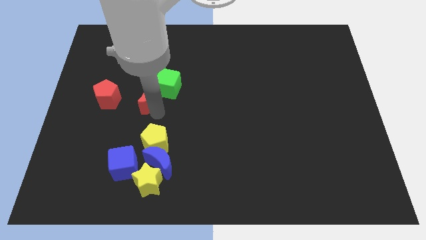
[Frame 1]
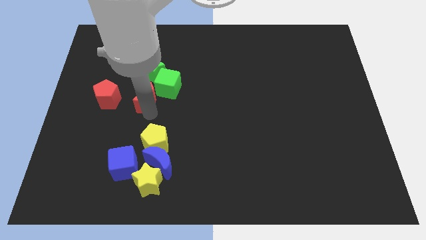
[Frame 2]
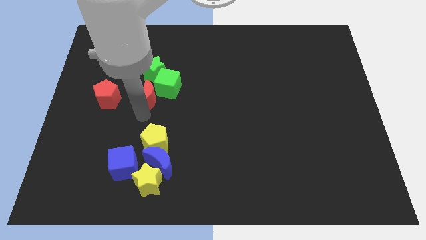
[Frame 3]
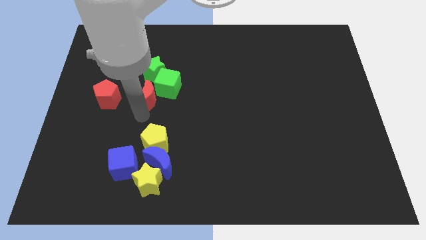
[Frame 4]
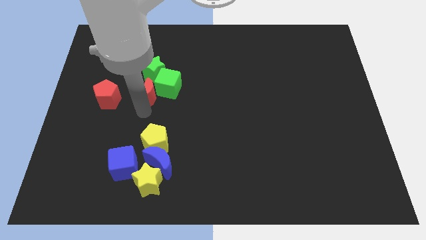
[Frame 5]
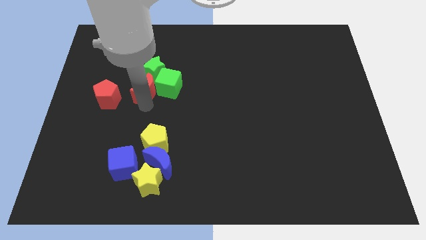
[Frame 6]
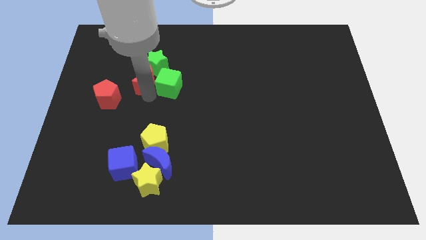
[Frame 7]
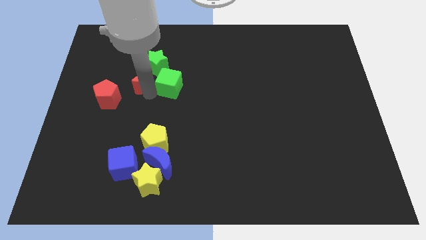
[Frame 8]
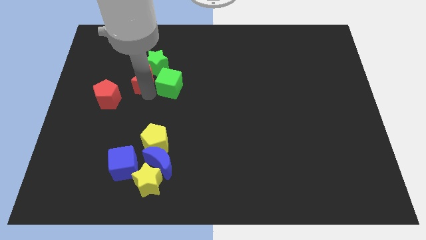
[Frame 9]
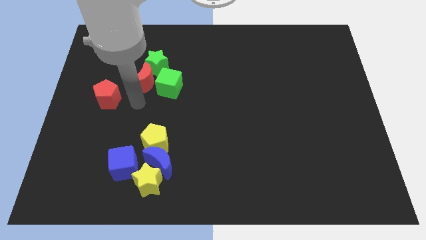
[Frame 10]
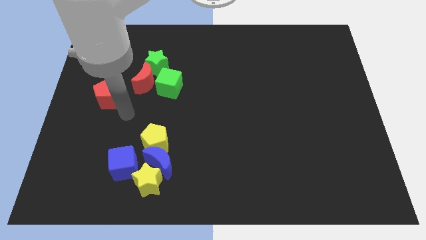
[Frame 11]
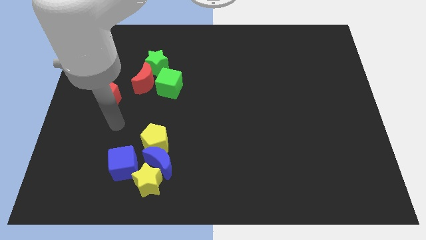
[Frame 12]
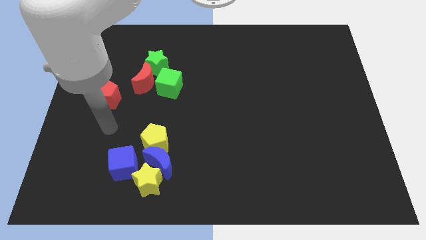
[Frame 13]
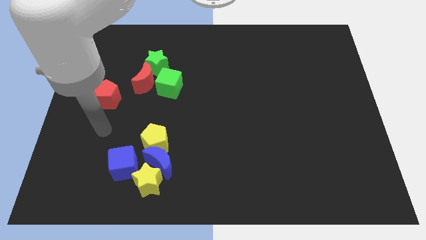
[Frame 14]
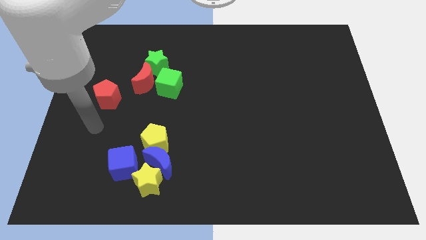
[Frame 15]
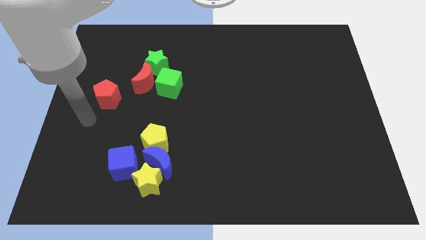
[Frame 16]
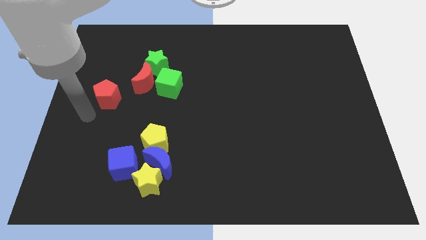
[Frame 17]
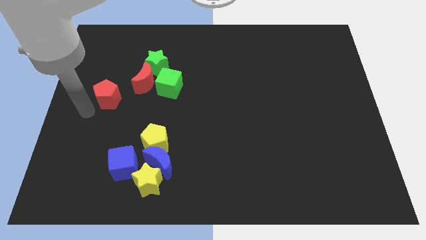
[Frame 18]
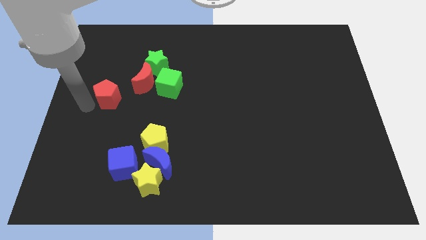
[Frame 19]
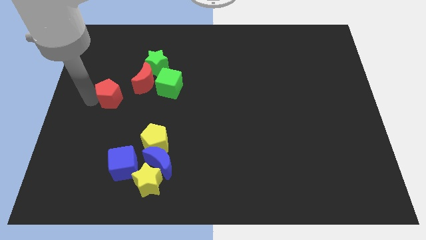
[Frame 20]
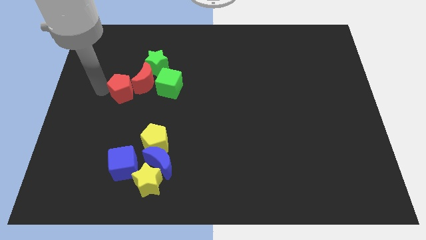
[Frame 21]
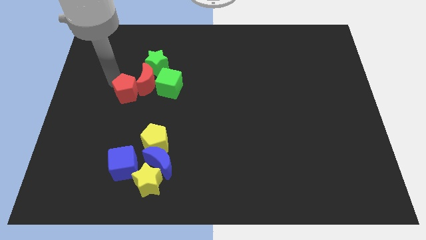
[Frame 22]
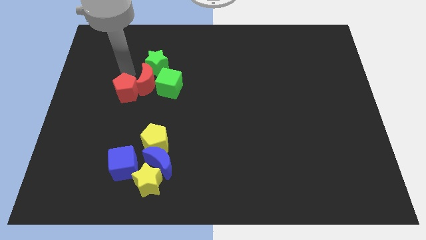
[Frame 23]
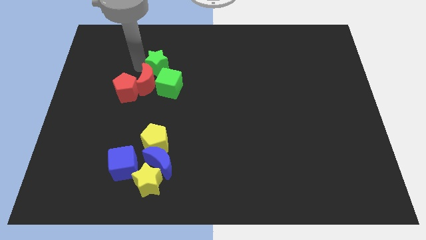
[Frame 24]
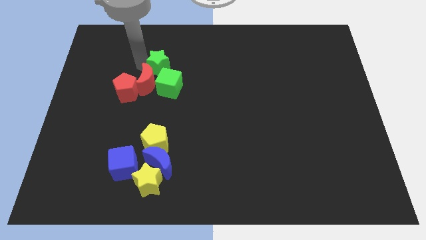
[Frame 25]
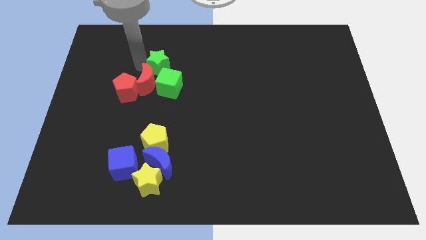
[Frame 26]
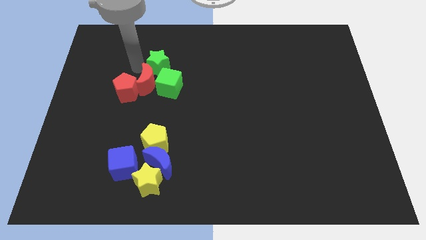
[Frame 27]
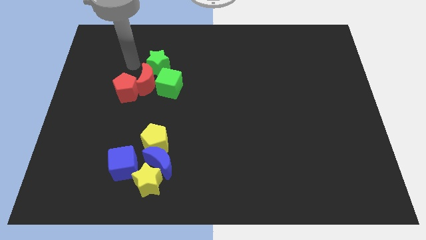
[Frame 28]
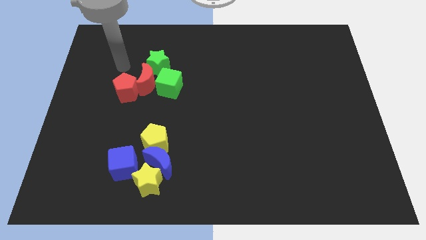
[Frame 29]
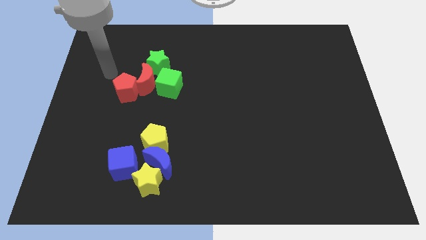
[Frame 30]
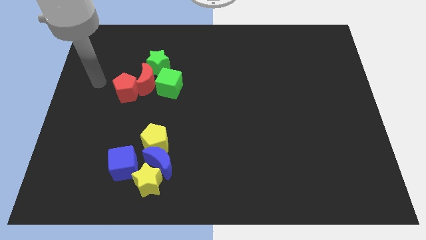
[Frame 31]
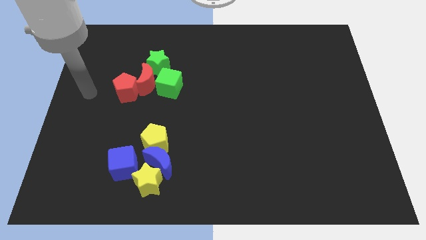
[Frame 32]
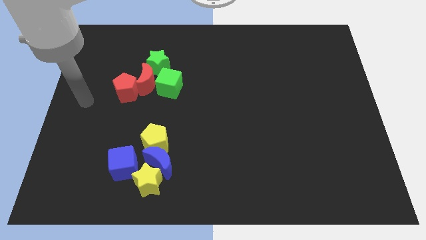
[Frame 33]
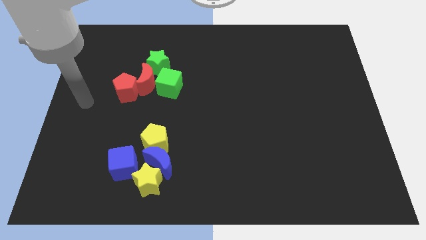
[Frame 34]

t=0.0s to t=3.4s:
push the red crescent and pentagon into the green star

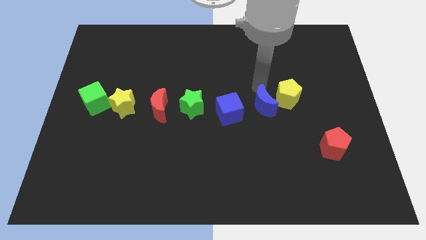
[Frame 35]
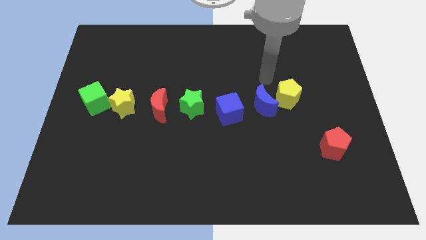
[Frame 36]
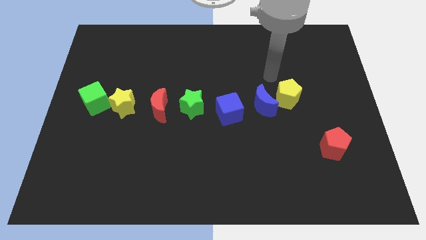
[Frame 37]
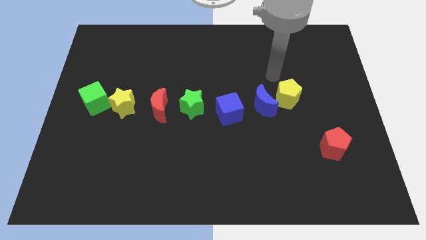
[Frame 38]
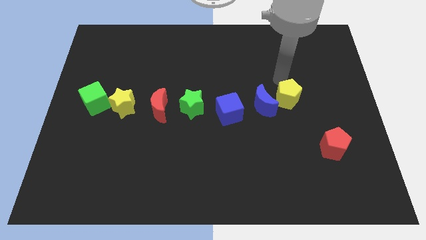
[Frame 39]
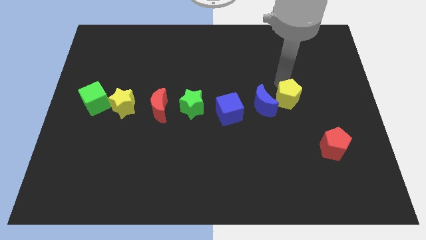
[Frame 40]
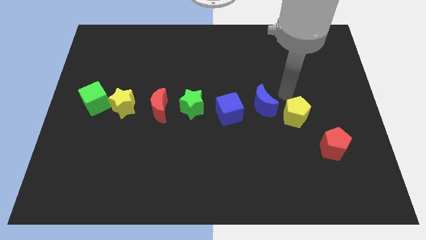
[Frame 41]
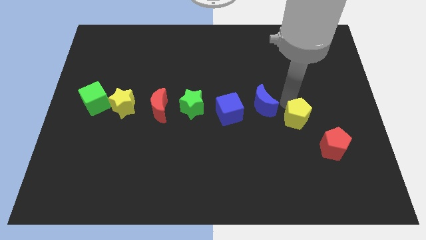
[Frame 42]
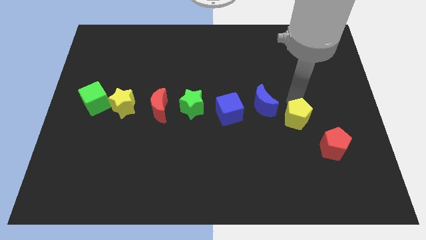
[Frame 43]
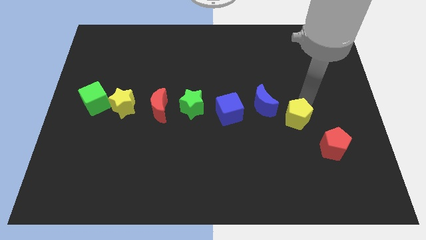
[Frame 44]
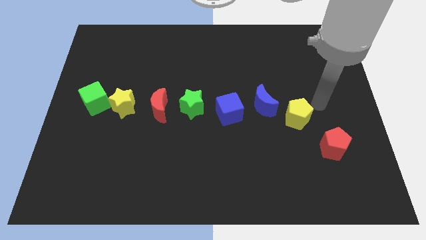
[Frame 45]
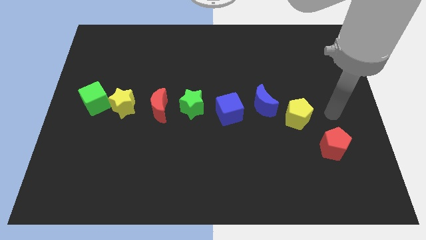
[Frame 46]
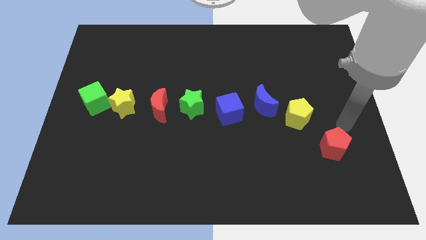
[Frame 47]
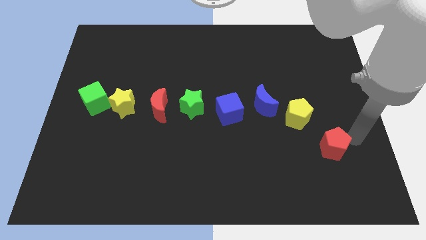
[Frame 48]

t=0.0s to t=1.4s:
slightly place yellow pentagon in between the blue moon and red pentagon

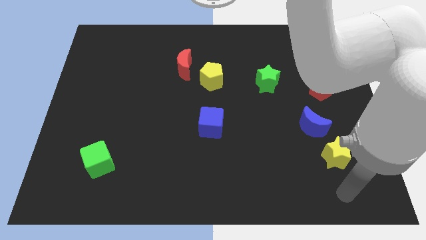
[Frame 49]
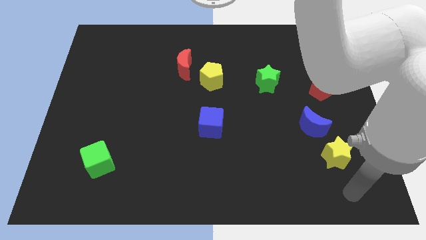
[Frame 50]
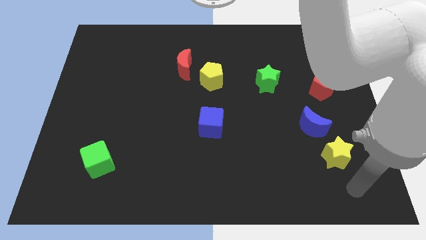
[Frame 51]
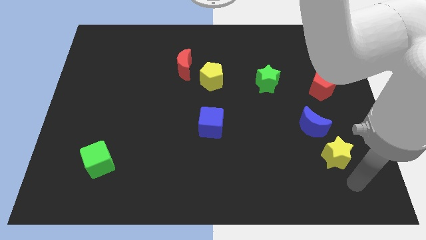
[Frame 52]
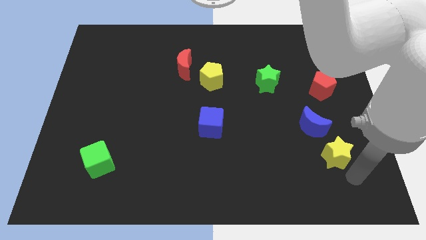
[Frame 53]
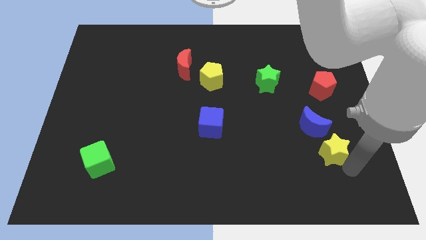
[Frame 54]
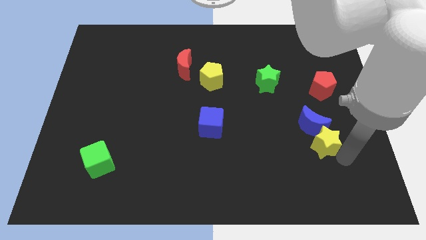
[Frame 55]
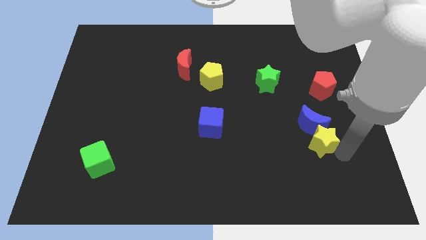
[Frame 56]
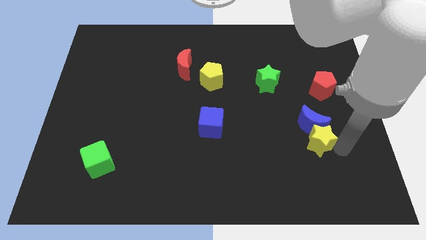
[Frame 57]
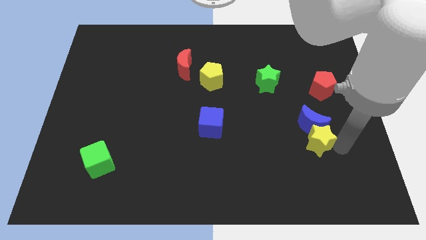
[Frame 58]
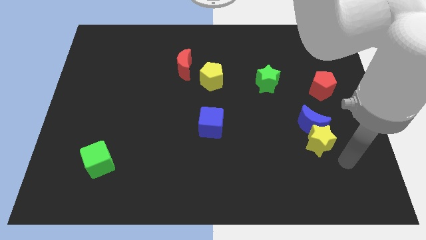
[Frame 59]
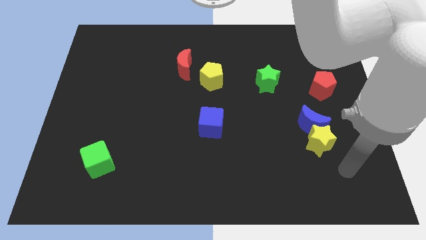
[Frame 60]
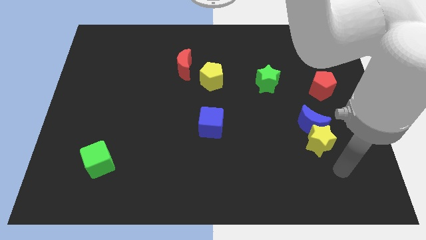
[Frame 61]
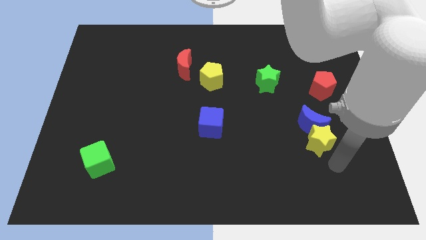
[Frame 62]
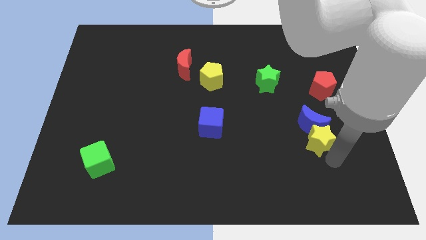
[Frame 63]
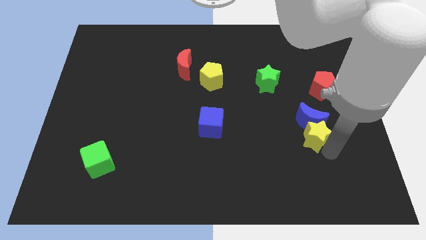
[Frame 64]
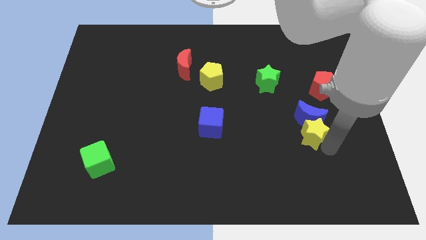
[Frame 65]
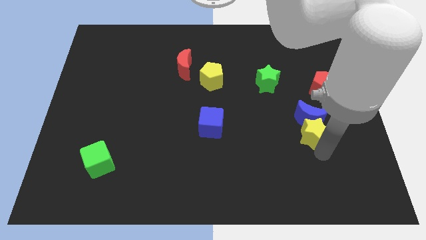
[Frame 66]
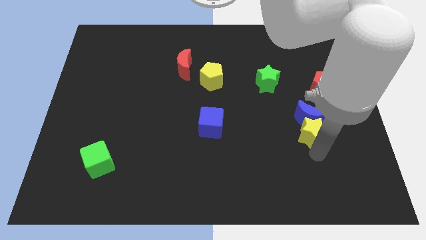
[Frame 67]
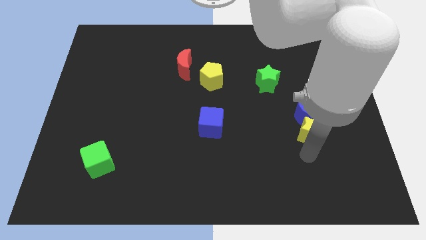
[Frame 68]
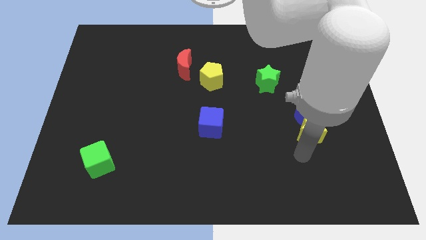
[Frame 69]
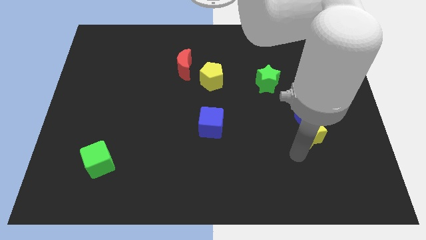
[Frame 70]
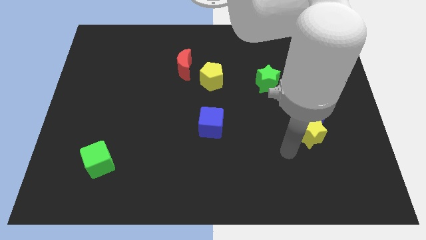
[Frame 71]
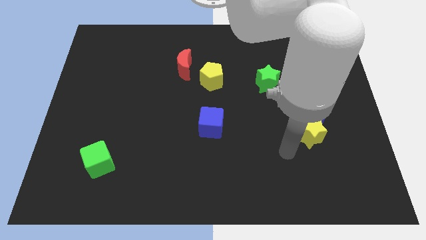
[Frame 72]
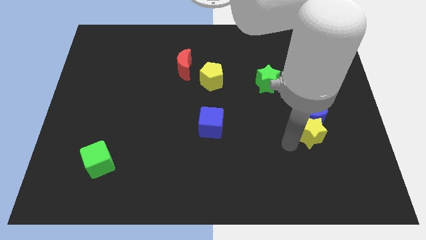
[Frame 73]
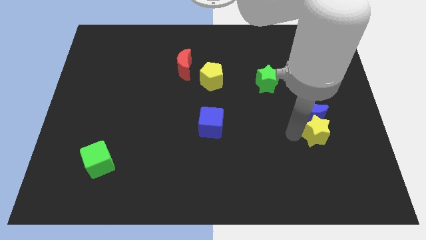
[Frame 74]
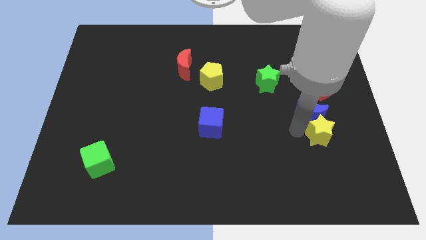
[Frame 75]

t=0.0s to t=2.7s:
move the yellow star near to the blue moon

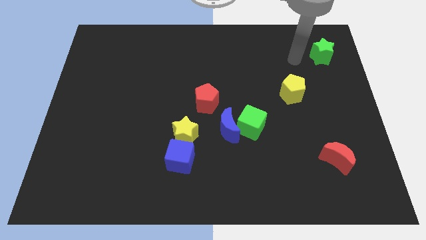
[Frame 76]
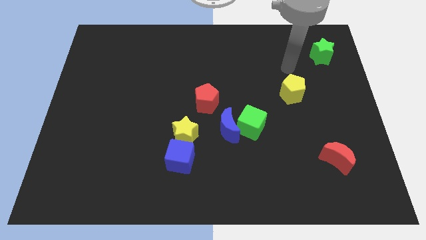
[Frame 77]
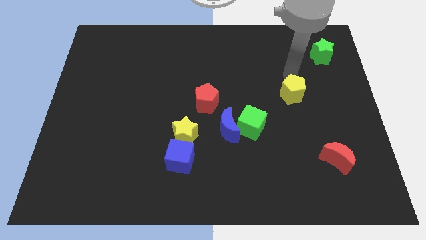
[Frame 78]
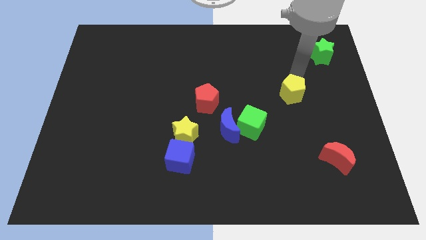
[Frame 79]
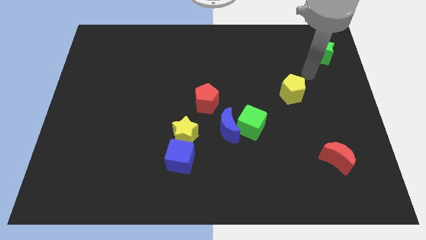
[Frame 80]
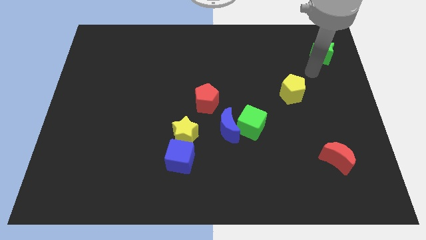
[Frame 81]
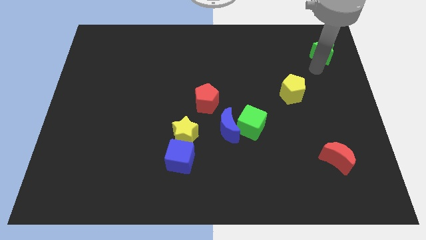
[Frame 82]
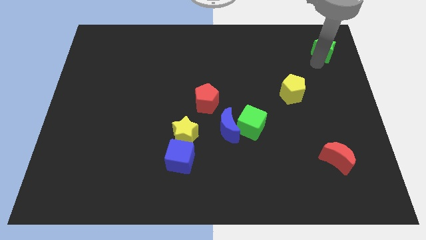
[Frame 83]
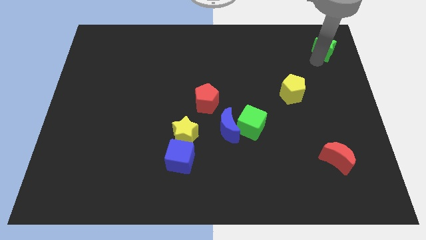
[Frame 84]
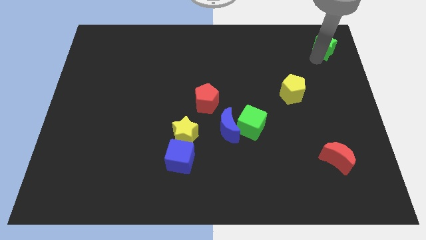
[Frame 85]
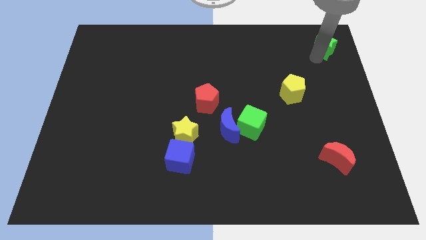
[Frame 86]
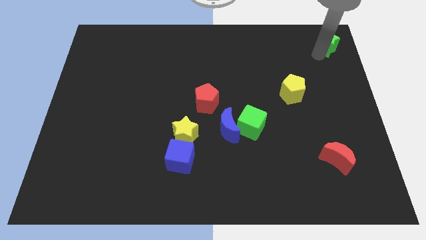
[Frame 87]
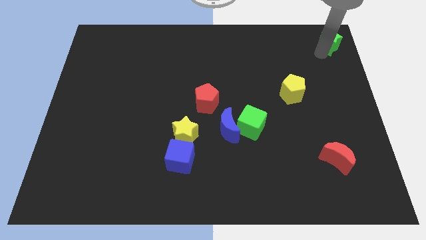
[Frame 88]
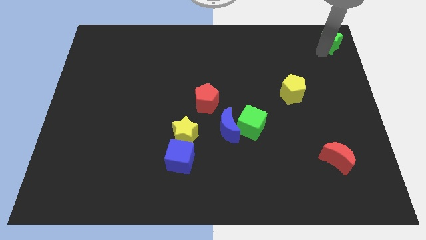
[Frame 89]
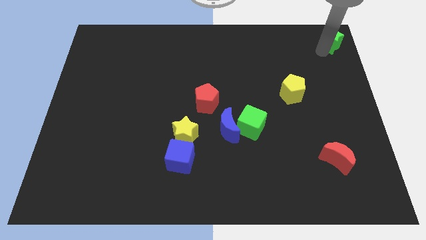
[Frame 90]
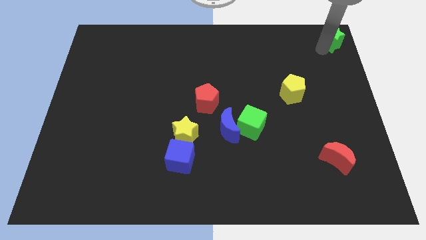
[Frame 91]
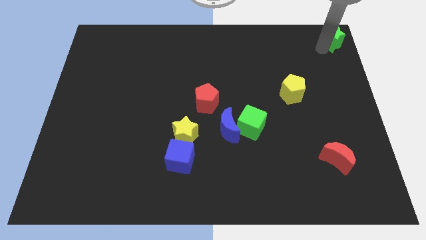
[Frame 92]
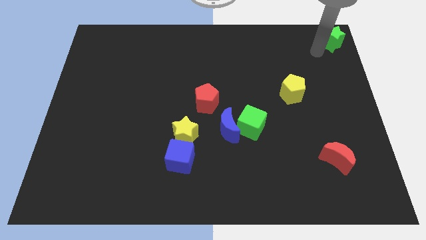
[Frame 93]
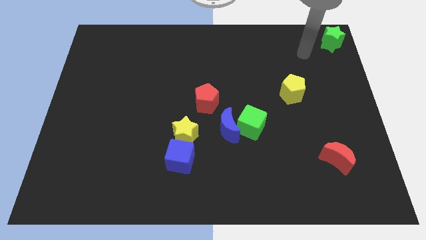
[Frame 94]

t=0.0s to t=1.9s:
place the green star at the top right corner of the board
